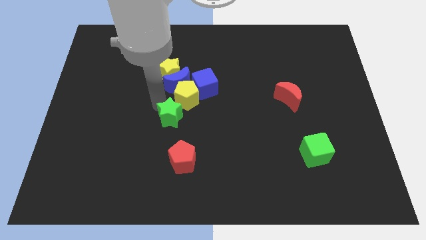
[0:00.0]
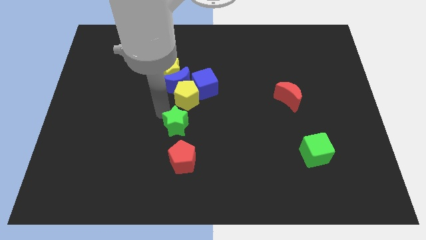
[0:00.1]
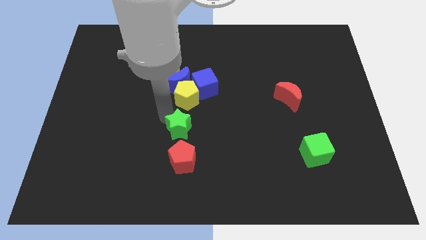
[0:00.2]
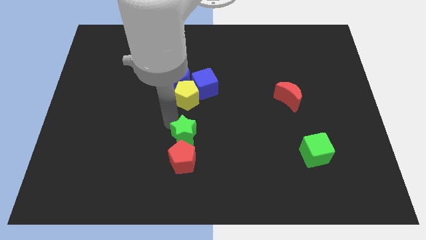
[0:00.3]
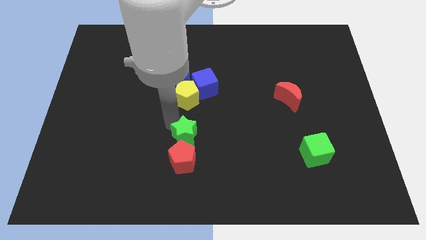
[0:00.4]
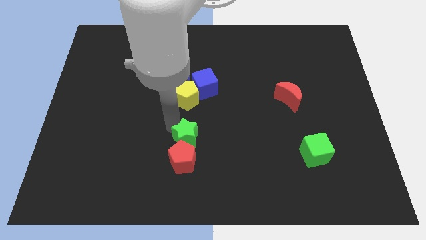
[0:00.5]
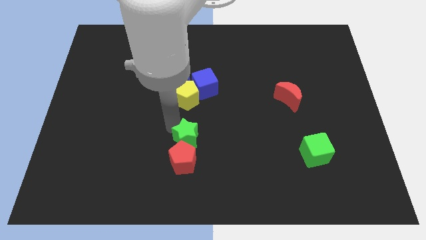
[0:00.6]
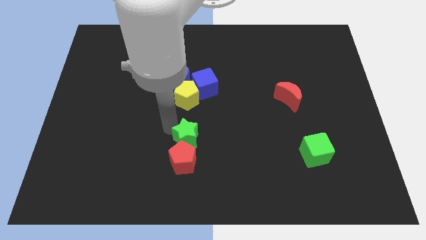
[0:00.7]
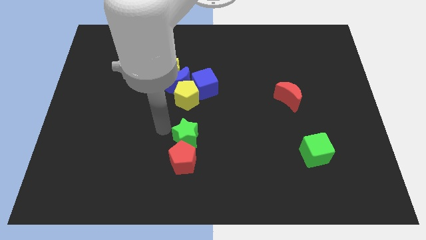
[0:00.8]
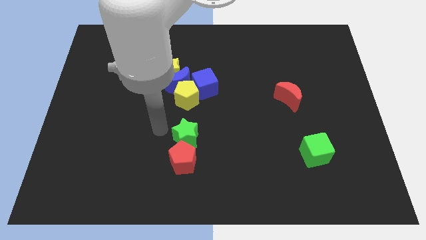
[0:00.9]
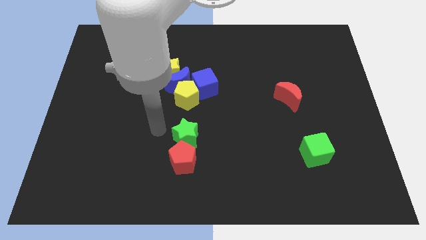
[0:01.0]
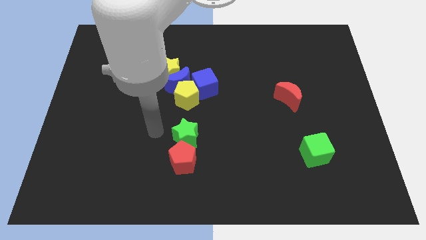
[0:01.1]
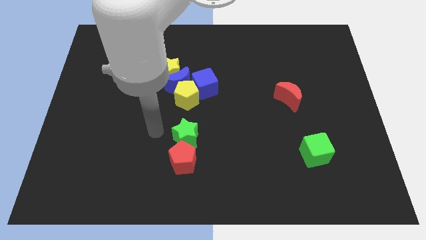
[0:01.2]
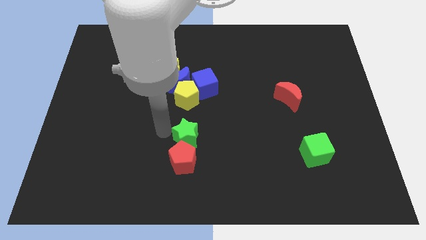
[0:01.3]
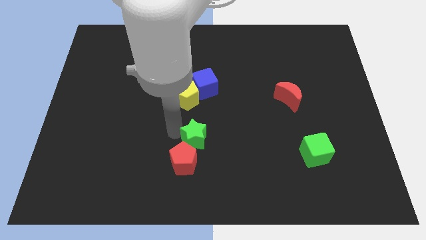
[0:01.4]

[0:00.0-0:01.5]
place green star above the red pentagon

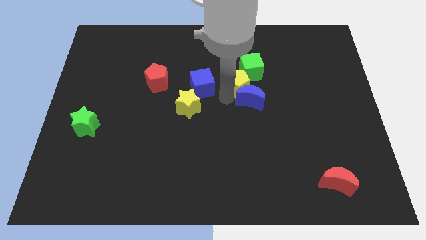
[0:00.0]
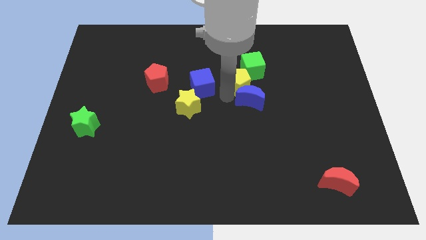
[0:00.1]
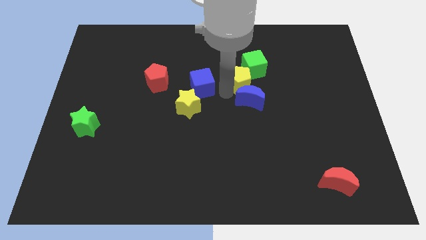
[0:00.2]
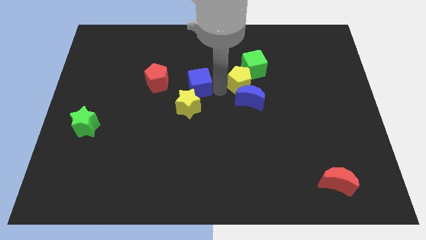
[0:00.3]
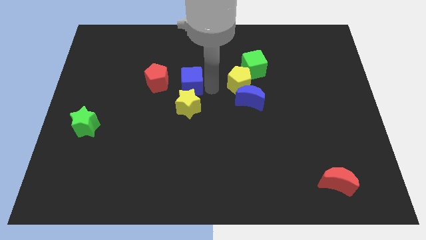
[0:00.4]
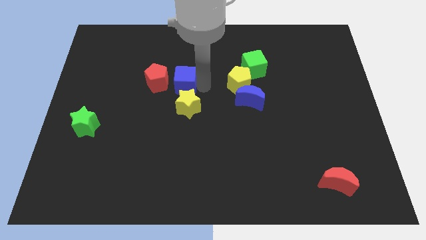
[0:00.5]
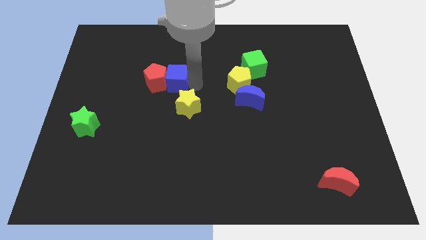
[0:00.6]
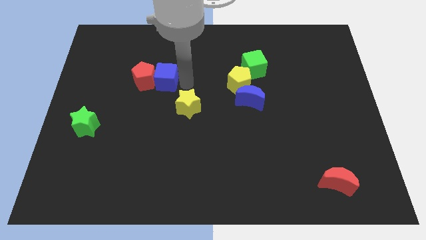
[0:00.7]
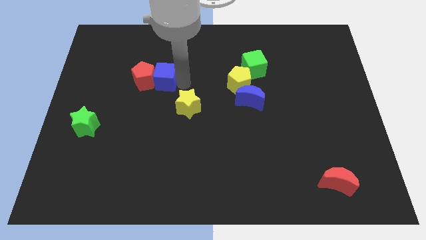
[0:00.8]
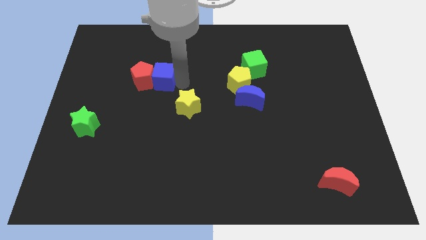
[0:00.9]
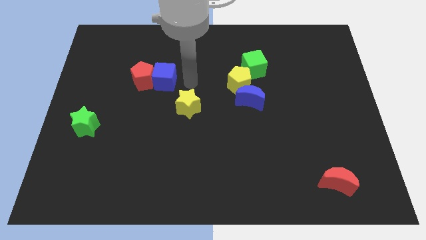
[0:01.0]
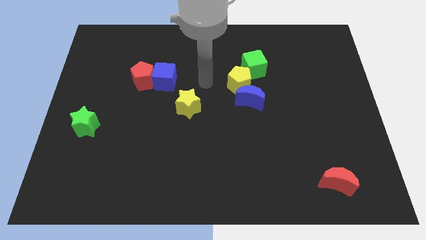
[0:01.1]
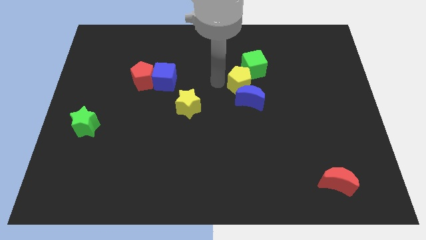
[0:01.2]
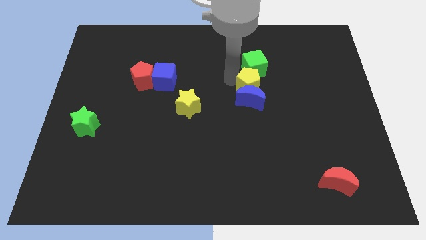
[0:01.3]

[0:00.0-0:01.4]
push the blue cube and red pentagon slightly to the left side of the board

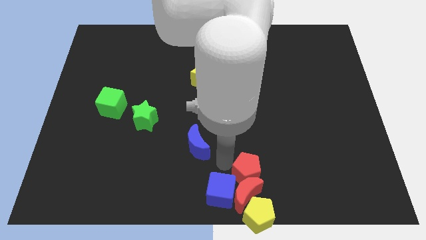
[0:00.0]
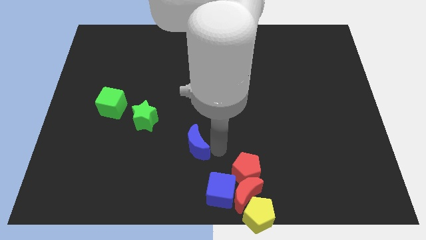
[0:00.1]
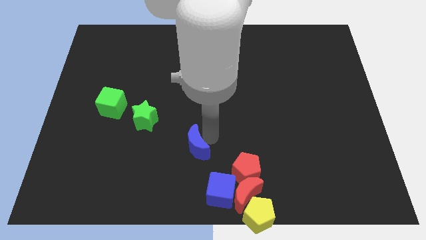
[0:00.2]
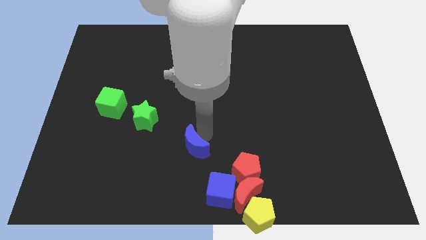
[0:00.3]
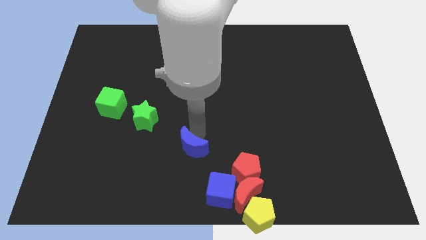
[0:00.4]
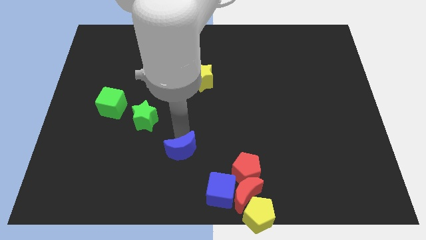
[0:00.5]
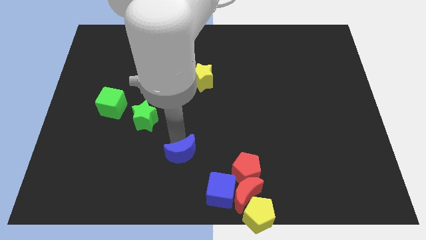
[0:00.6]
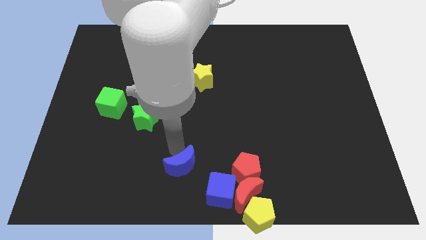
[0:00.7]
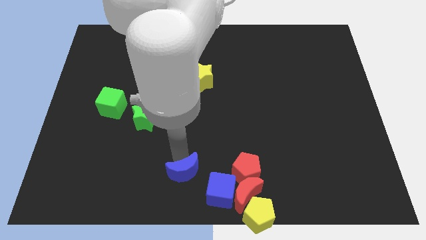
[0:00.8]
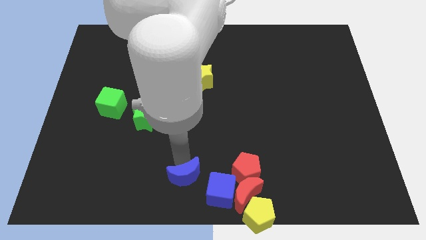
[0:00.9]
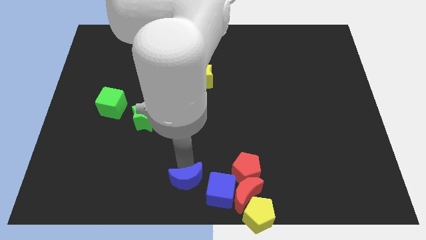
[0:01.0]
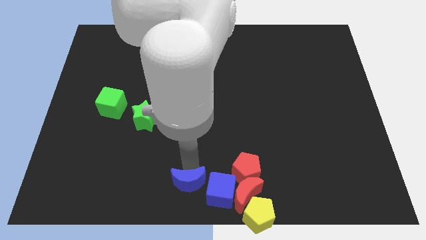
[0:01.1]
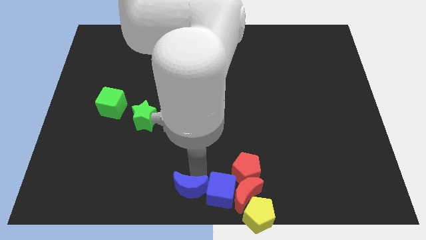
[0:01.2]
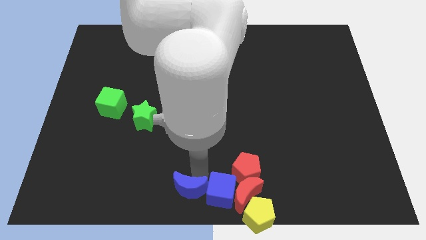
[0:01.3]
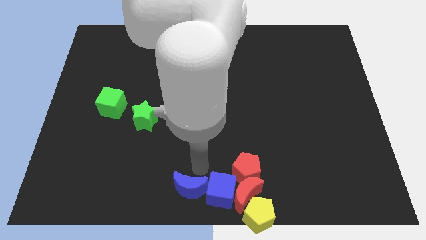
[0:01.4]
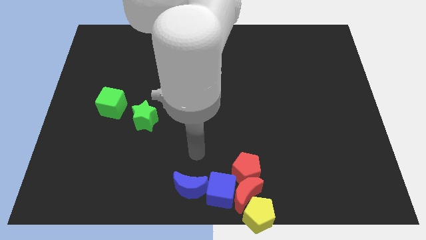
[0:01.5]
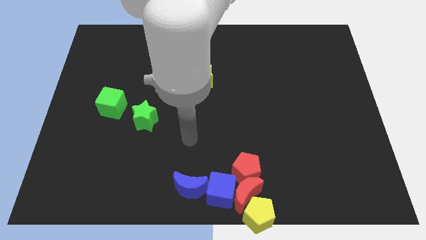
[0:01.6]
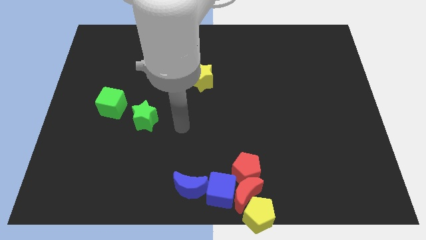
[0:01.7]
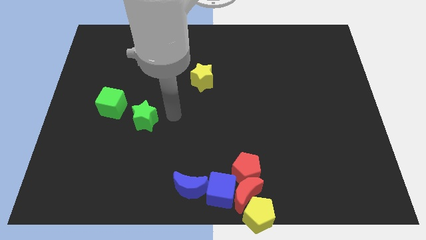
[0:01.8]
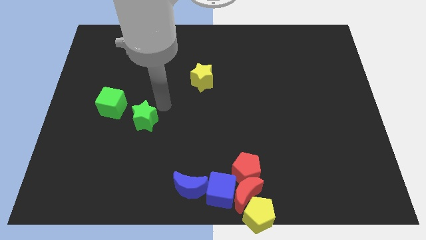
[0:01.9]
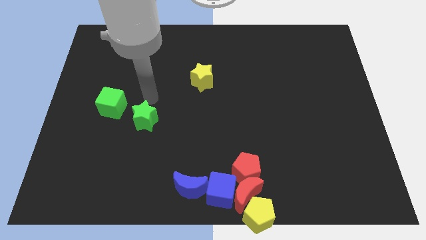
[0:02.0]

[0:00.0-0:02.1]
move blue moon to the left of blue cube

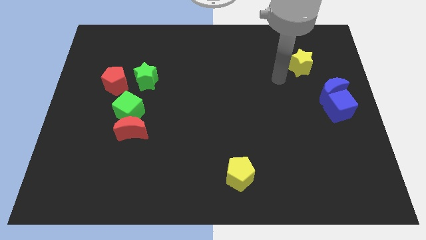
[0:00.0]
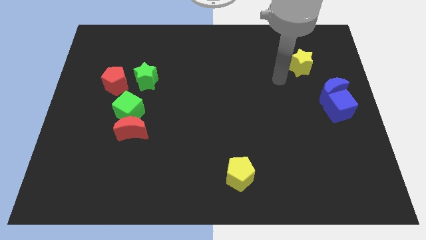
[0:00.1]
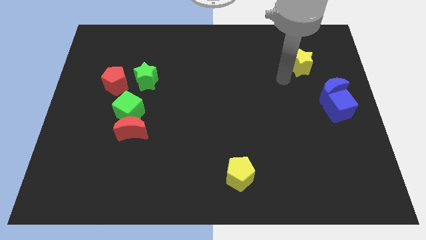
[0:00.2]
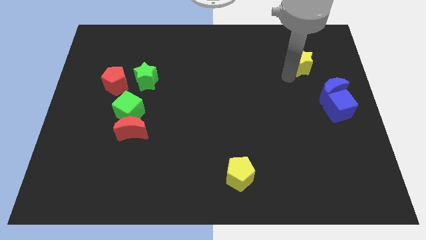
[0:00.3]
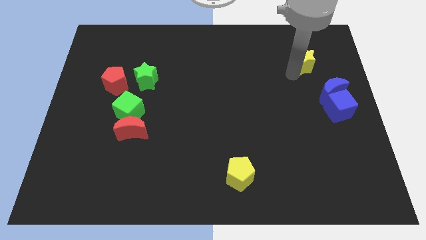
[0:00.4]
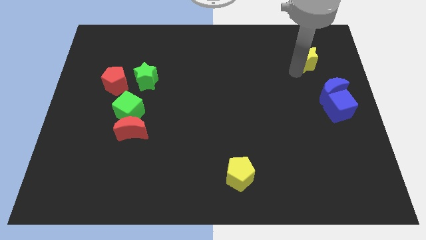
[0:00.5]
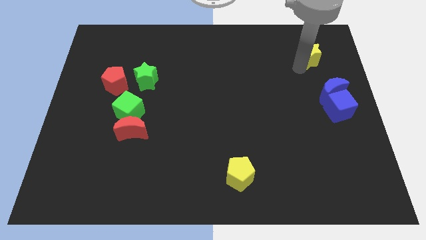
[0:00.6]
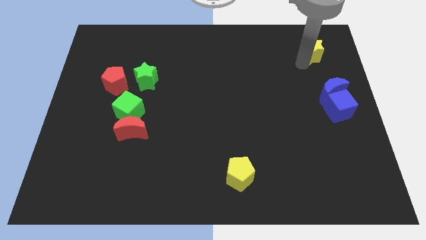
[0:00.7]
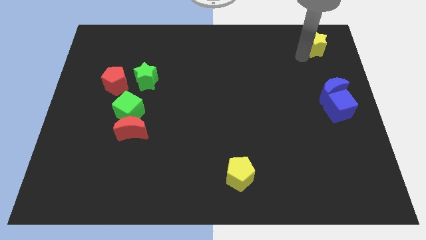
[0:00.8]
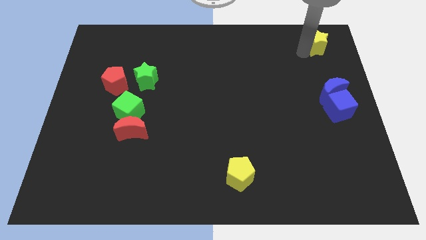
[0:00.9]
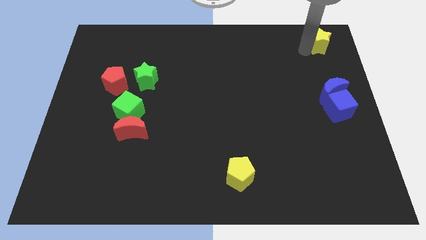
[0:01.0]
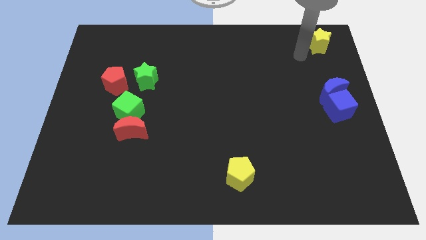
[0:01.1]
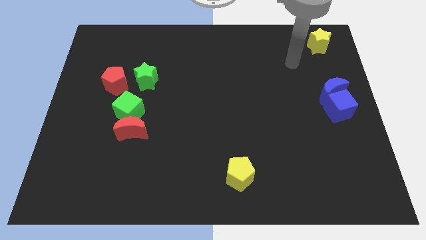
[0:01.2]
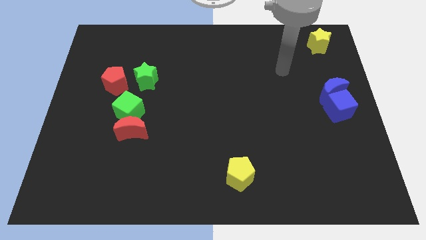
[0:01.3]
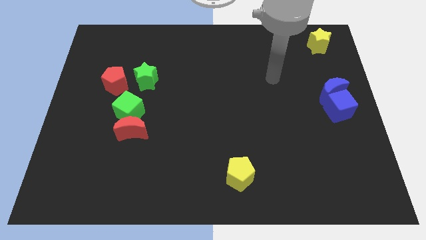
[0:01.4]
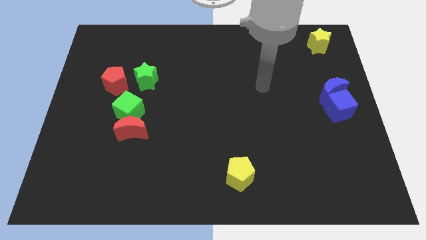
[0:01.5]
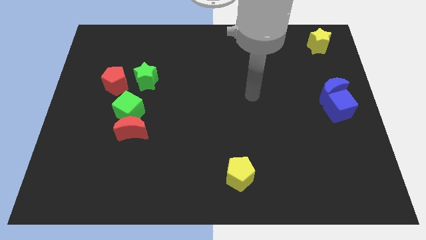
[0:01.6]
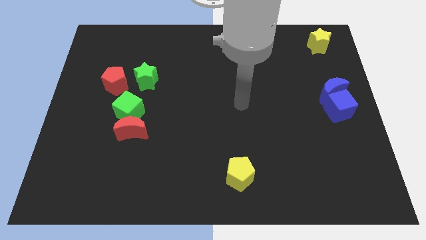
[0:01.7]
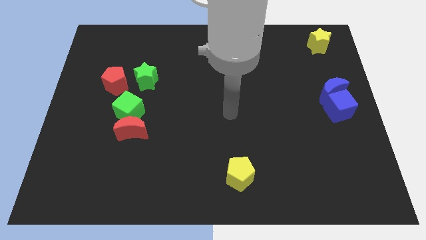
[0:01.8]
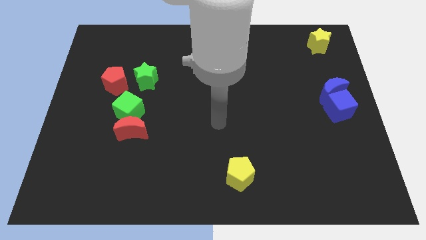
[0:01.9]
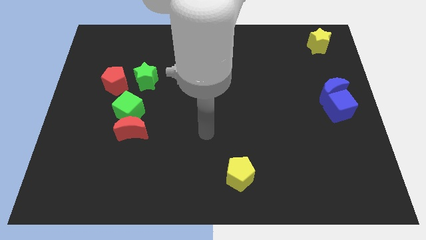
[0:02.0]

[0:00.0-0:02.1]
push the yellow star towards the top right corner of the border

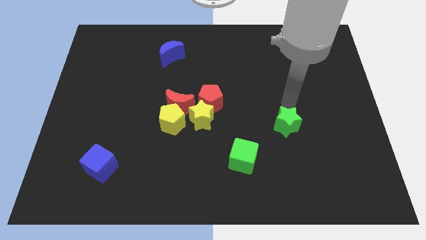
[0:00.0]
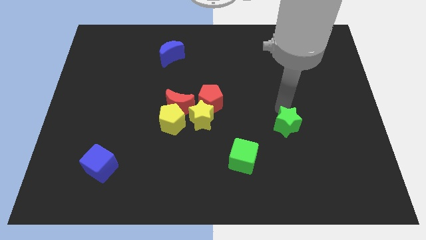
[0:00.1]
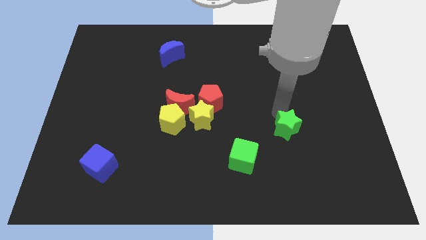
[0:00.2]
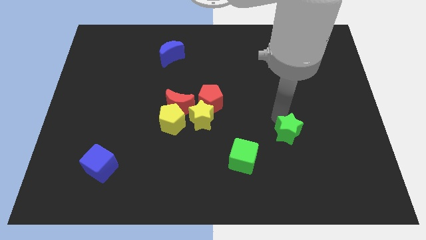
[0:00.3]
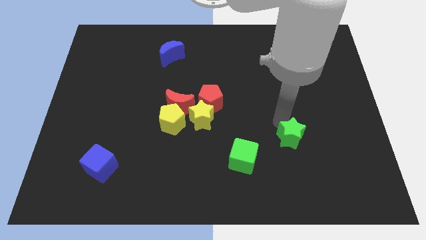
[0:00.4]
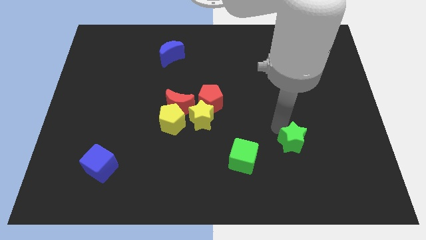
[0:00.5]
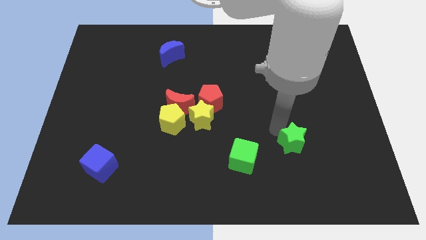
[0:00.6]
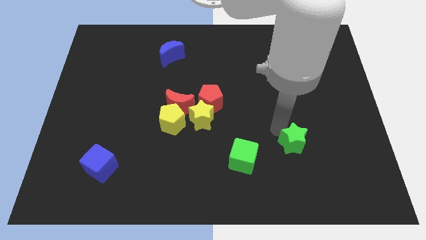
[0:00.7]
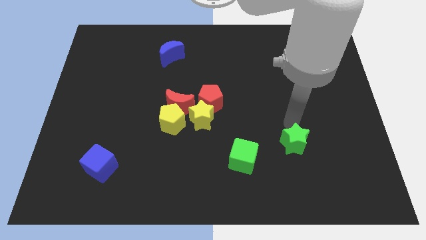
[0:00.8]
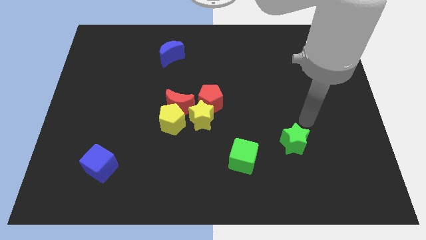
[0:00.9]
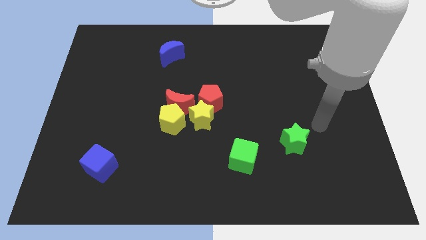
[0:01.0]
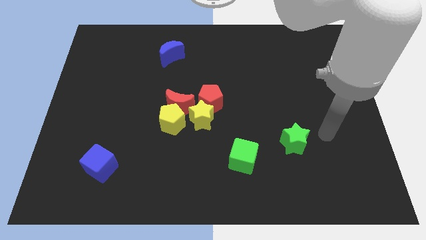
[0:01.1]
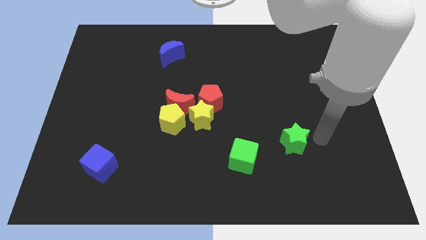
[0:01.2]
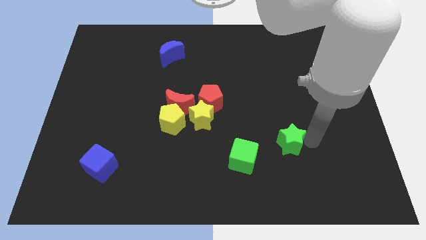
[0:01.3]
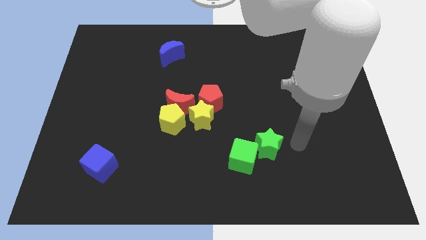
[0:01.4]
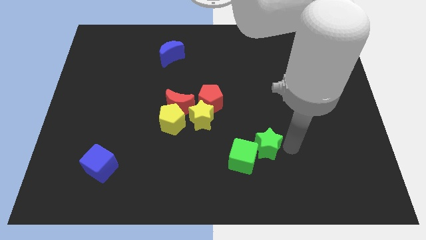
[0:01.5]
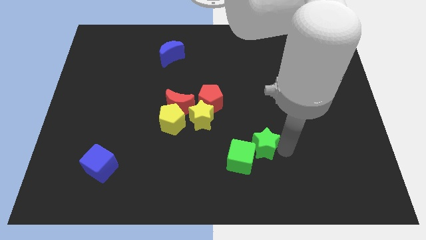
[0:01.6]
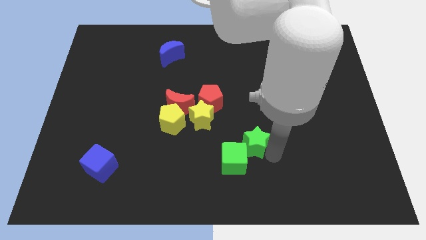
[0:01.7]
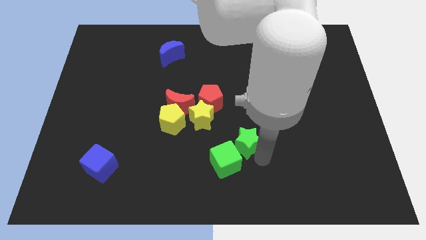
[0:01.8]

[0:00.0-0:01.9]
push the green star into the green cube
